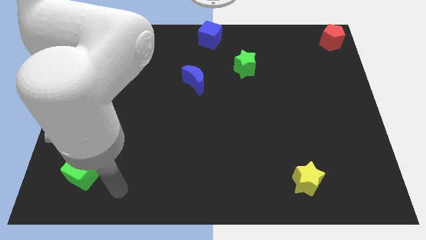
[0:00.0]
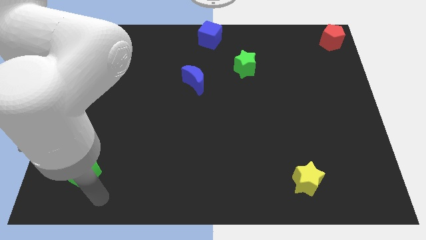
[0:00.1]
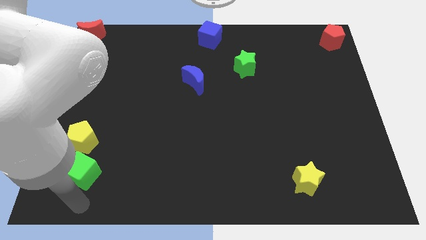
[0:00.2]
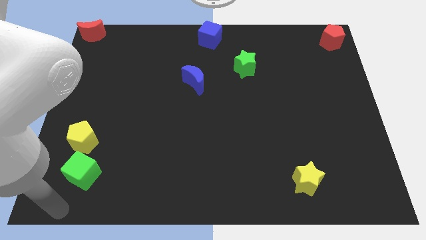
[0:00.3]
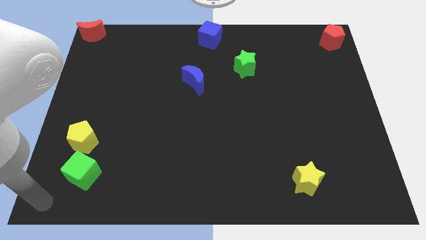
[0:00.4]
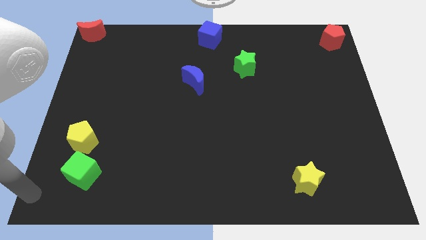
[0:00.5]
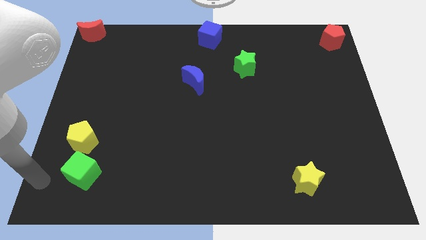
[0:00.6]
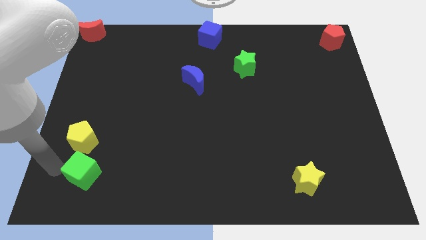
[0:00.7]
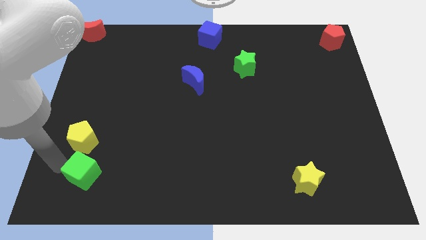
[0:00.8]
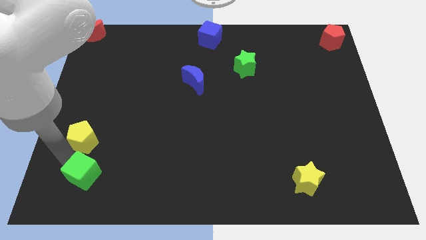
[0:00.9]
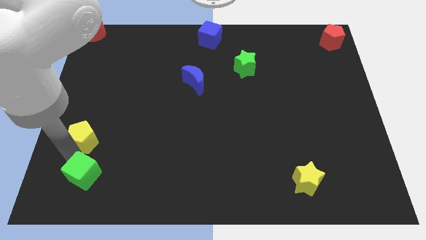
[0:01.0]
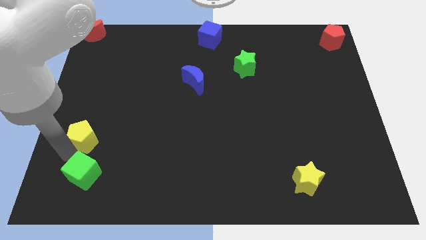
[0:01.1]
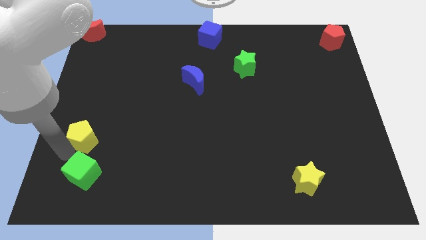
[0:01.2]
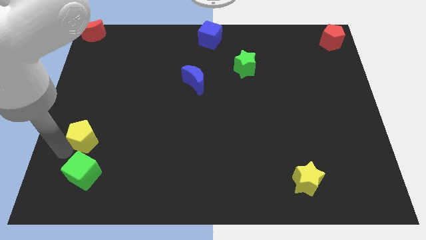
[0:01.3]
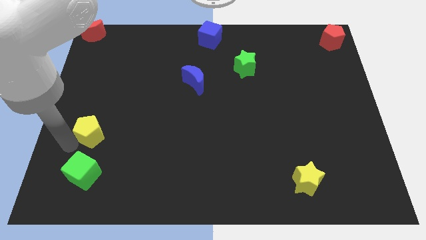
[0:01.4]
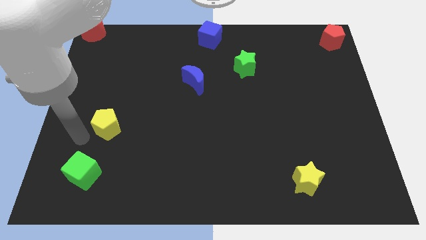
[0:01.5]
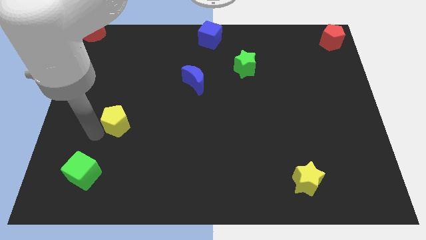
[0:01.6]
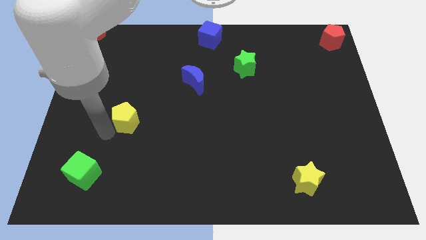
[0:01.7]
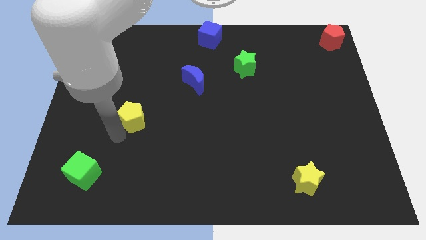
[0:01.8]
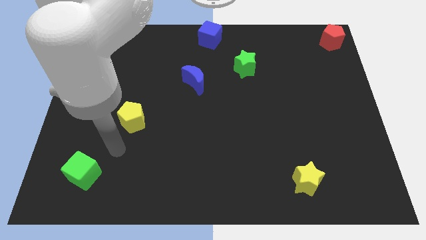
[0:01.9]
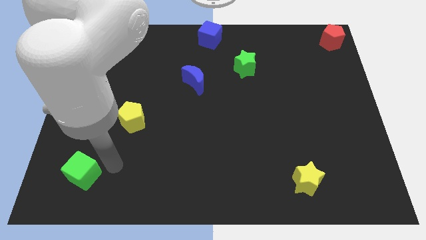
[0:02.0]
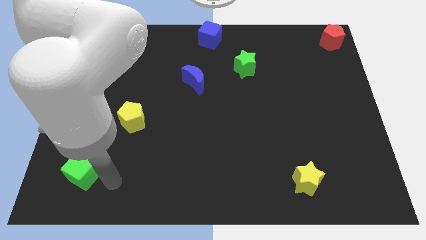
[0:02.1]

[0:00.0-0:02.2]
separate yellow pentagon from green cube

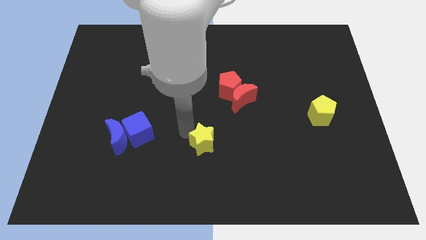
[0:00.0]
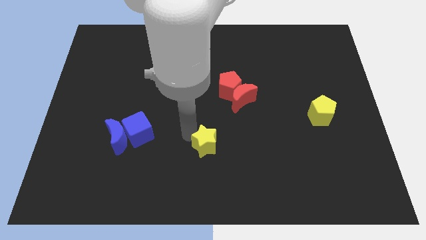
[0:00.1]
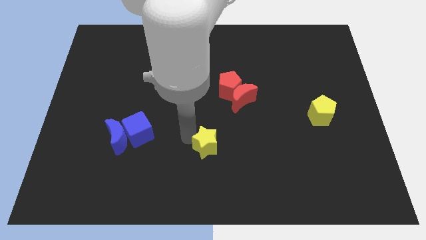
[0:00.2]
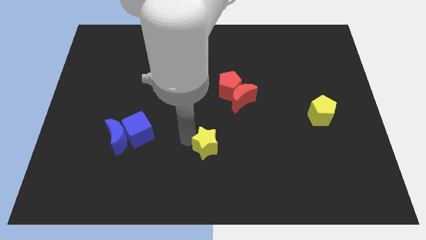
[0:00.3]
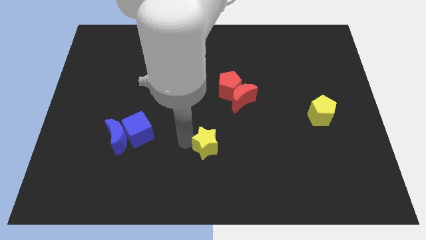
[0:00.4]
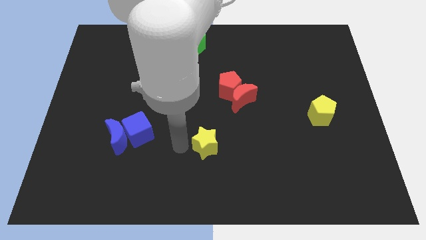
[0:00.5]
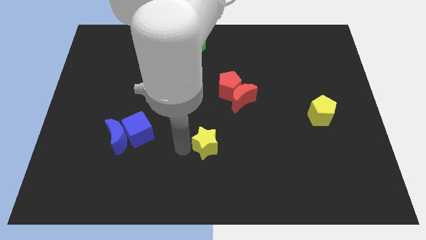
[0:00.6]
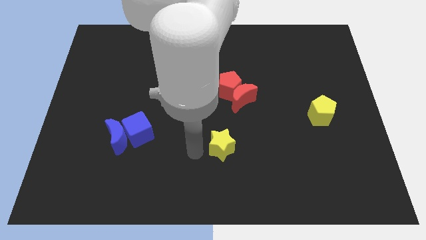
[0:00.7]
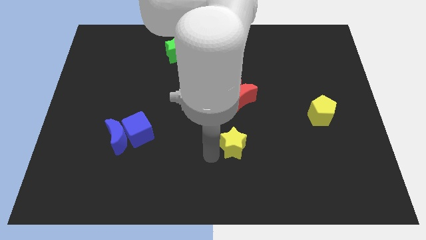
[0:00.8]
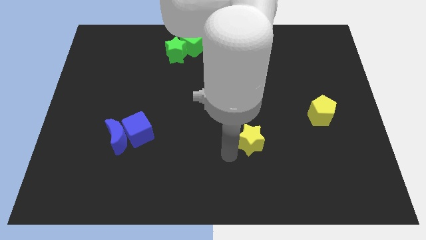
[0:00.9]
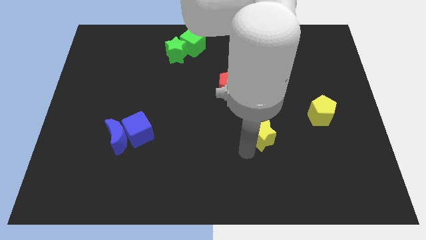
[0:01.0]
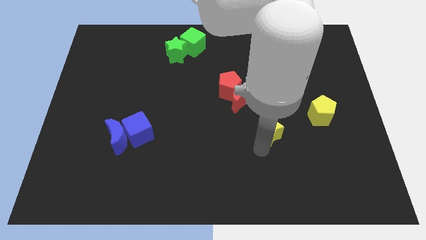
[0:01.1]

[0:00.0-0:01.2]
push the yellow star to the bottom of the red moon

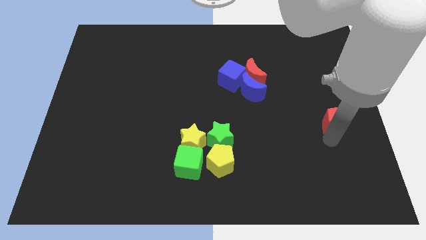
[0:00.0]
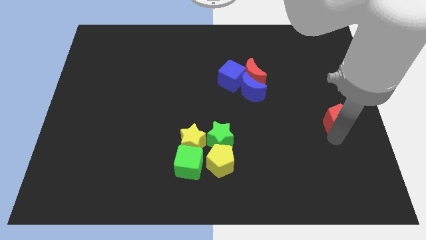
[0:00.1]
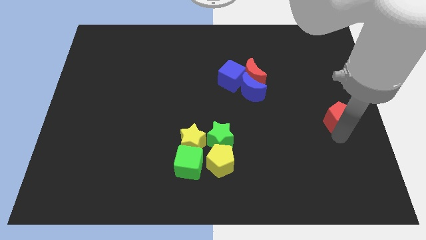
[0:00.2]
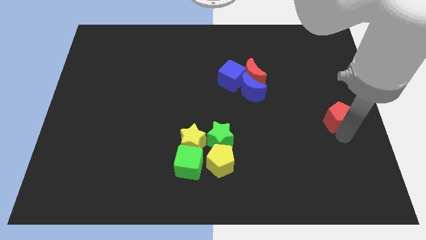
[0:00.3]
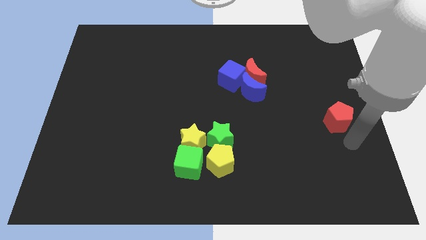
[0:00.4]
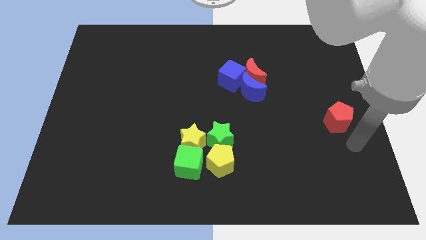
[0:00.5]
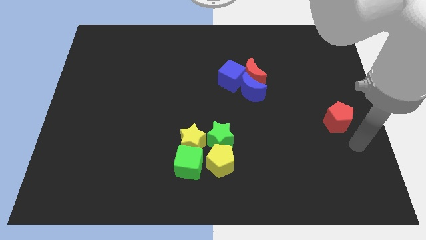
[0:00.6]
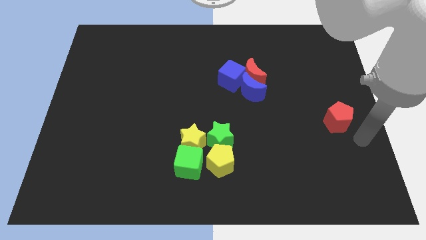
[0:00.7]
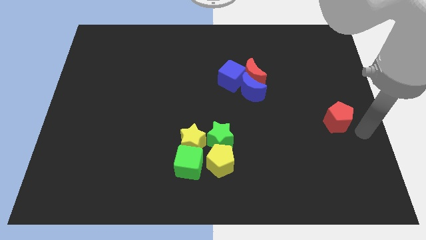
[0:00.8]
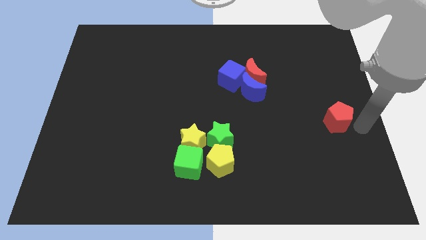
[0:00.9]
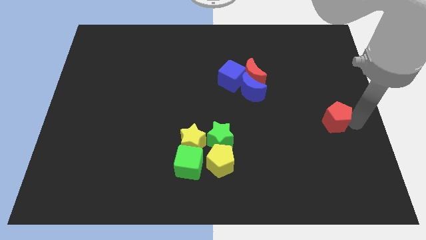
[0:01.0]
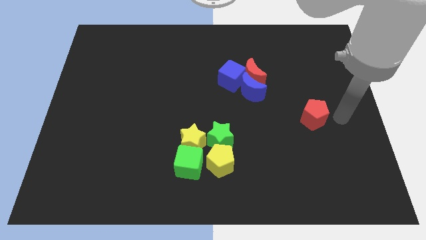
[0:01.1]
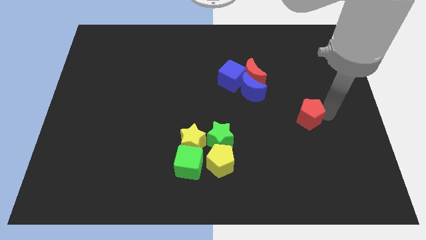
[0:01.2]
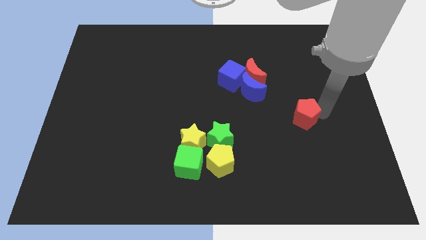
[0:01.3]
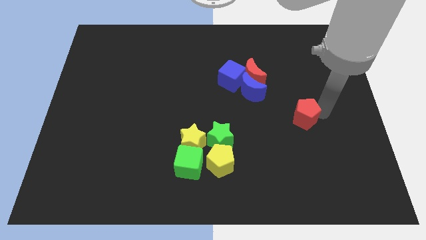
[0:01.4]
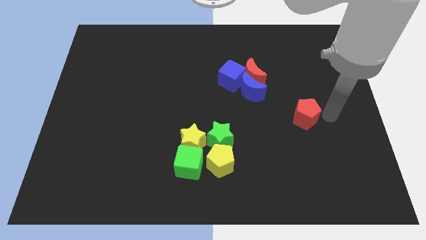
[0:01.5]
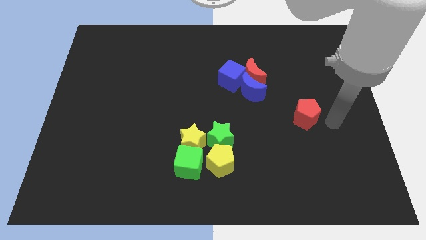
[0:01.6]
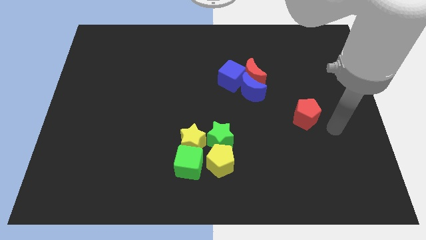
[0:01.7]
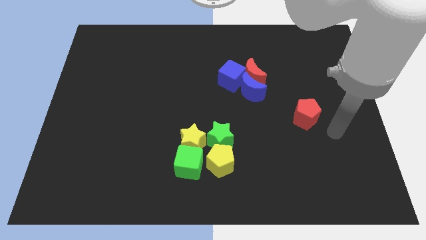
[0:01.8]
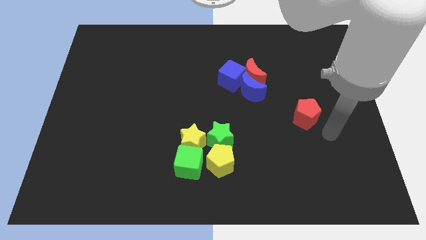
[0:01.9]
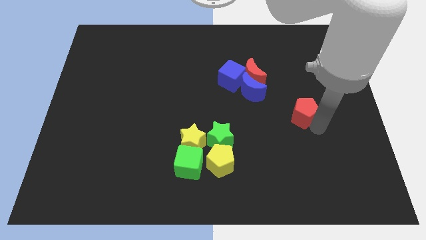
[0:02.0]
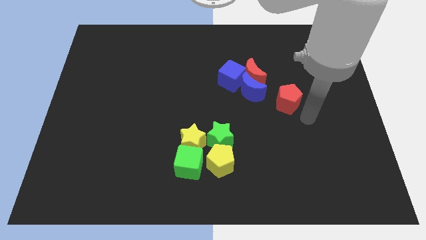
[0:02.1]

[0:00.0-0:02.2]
place the red pentagon diagonally to the bottom right of the blue crescent

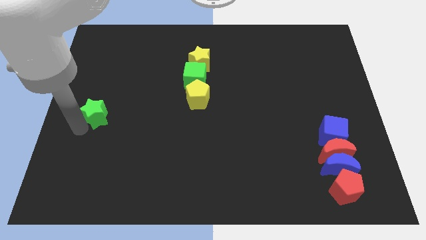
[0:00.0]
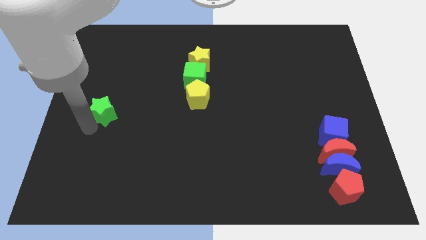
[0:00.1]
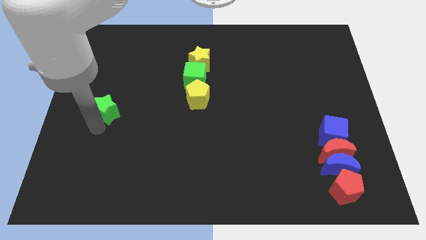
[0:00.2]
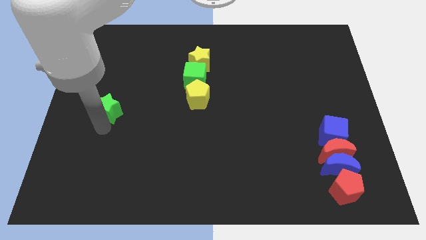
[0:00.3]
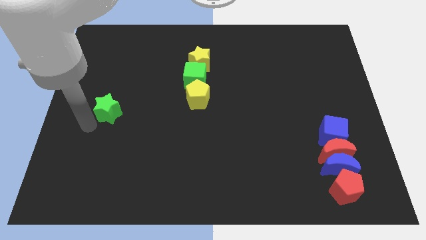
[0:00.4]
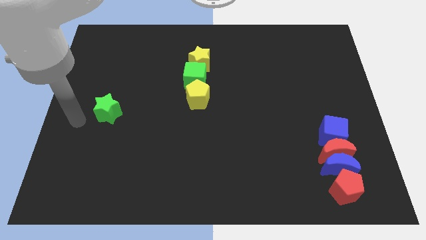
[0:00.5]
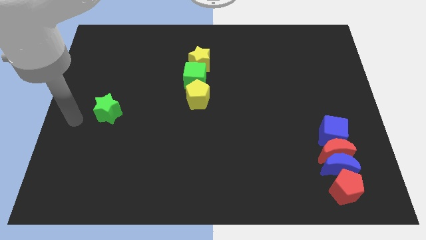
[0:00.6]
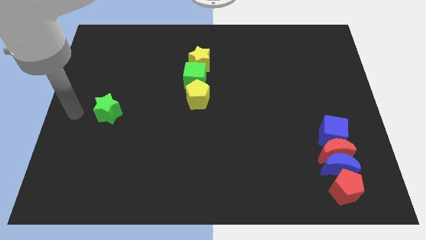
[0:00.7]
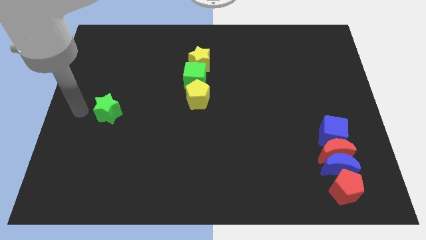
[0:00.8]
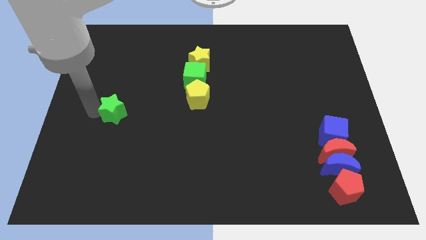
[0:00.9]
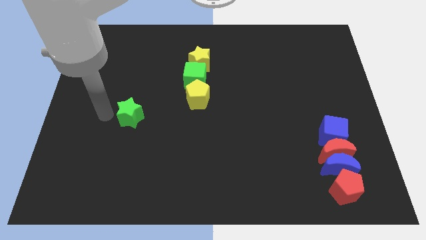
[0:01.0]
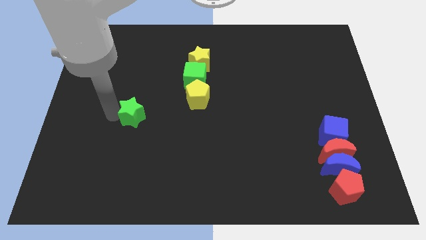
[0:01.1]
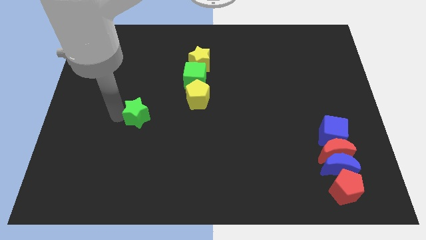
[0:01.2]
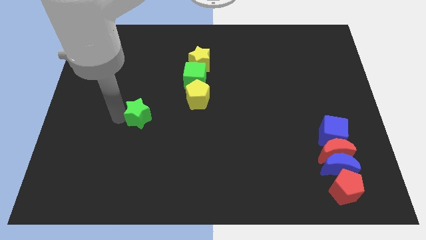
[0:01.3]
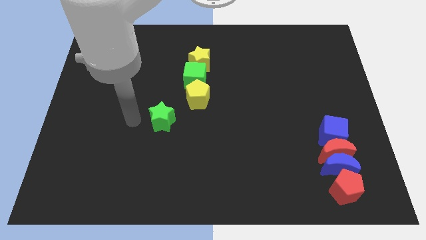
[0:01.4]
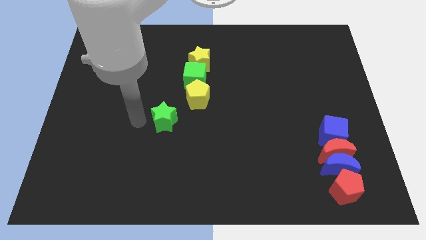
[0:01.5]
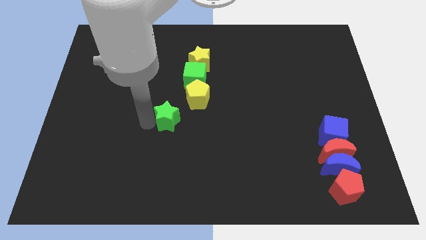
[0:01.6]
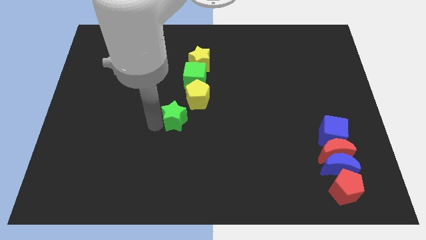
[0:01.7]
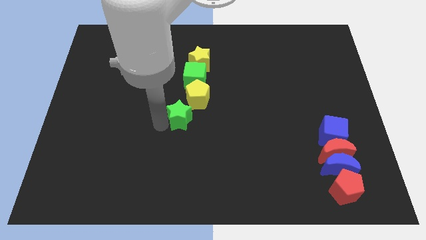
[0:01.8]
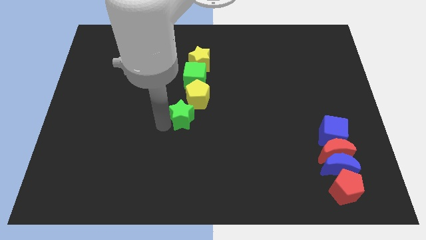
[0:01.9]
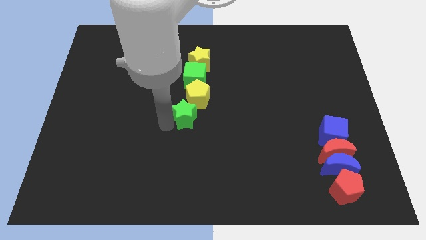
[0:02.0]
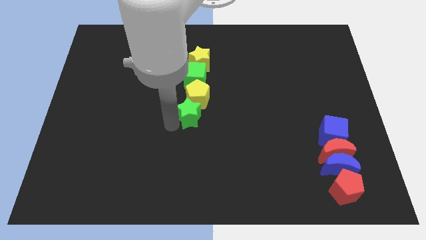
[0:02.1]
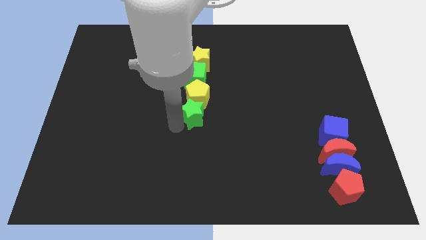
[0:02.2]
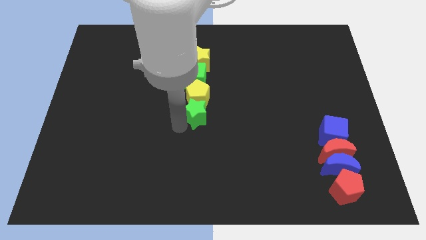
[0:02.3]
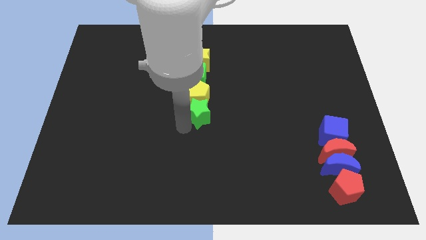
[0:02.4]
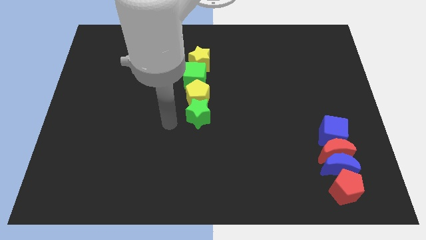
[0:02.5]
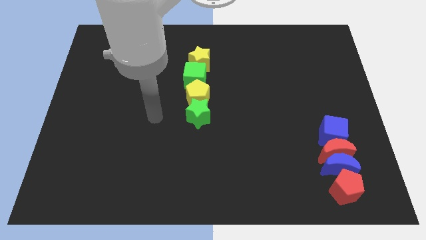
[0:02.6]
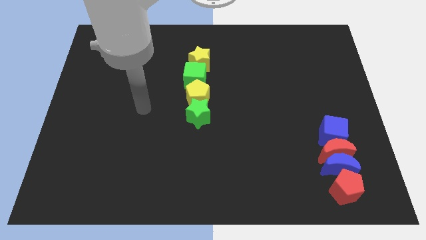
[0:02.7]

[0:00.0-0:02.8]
drag the green star and place it below yellow pentagon

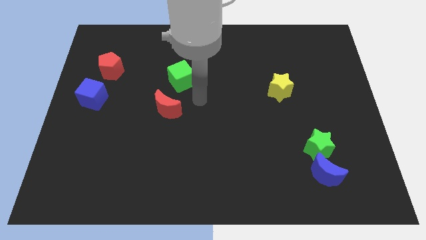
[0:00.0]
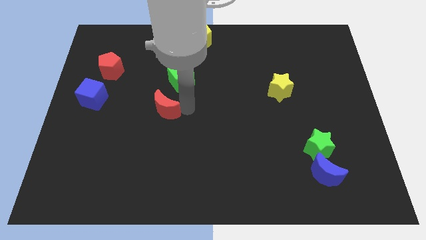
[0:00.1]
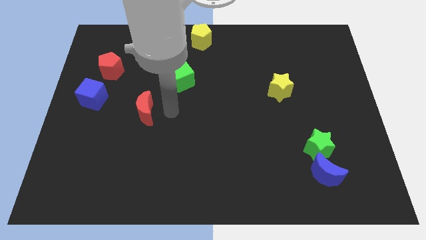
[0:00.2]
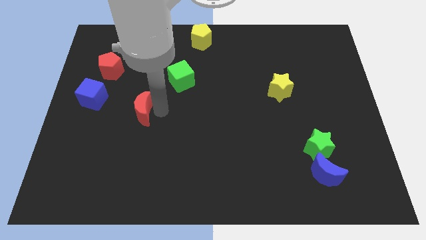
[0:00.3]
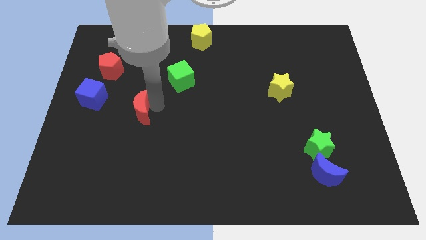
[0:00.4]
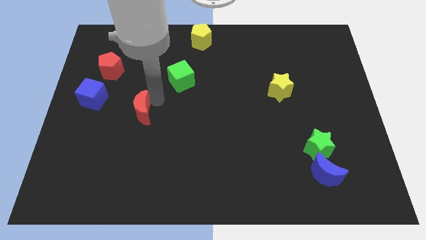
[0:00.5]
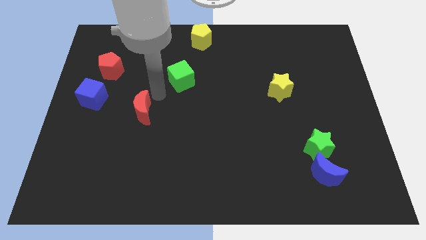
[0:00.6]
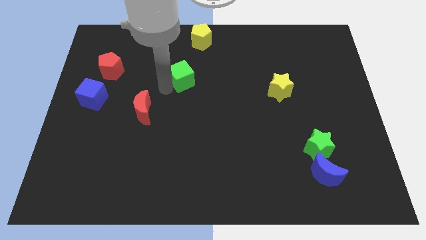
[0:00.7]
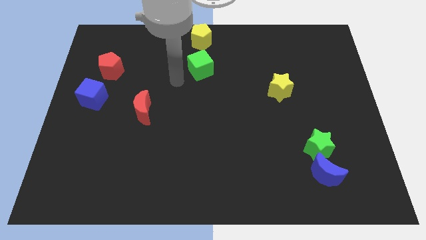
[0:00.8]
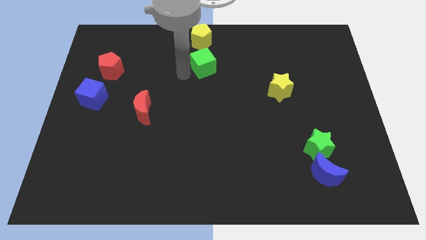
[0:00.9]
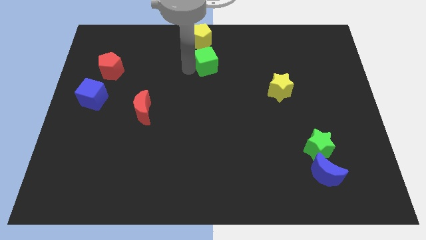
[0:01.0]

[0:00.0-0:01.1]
place the green cube below the yellow pentagon
